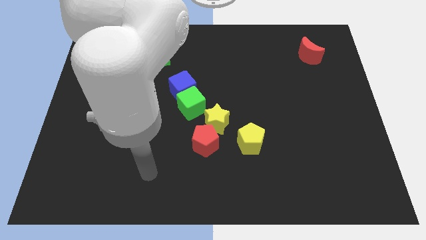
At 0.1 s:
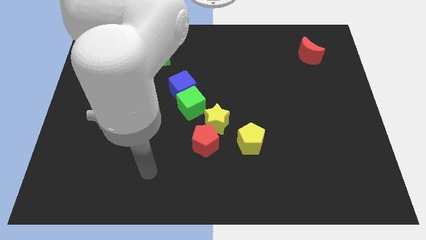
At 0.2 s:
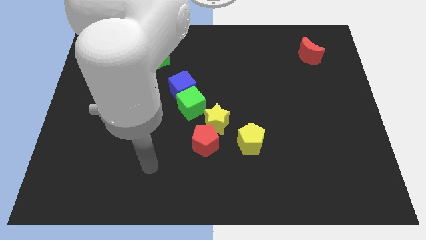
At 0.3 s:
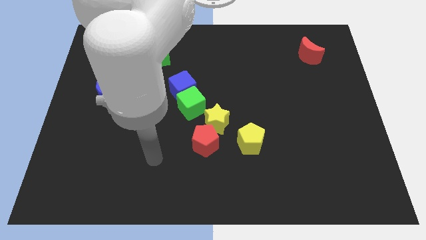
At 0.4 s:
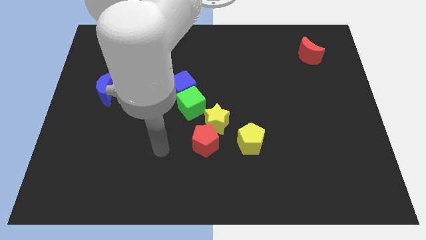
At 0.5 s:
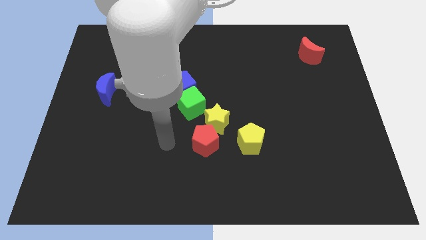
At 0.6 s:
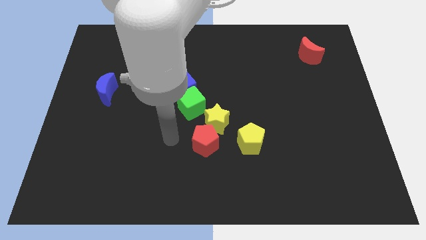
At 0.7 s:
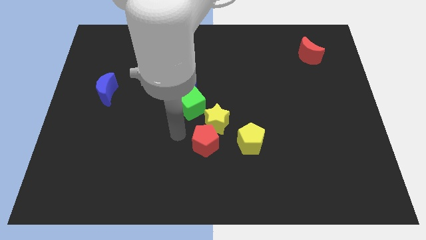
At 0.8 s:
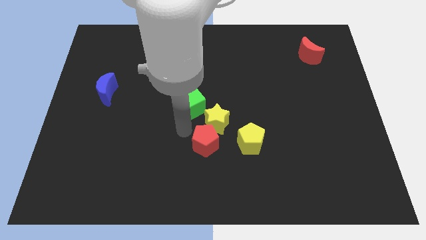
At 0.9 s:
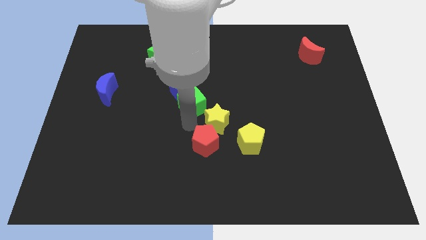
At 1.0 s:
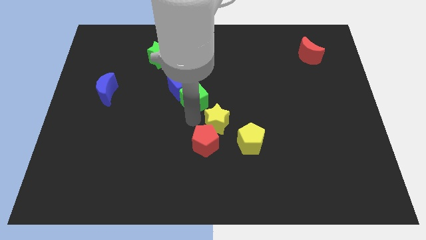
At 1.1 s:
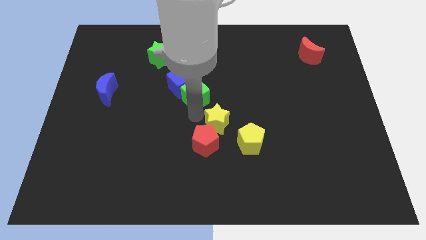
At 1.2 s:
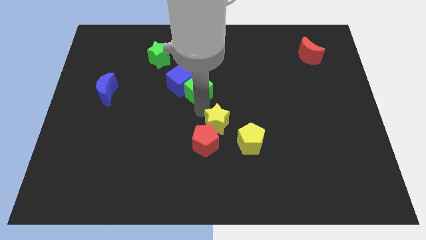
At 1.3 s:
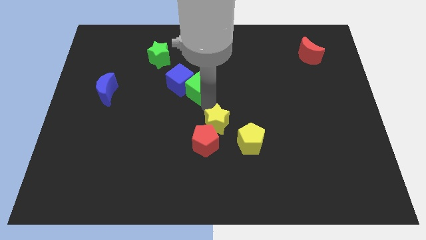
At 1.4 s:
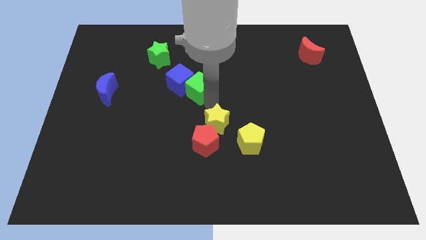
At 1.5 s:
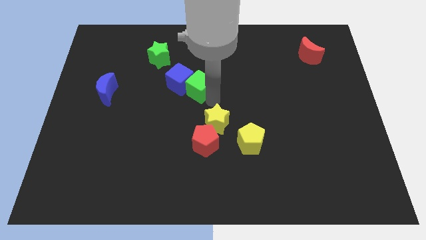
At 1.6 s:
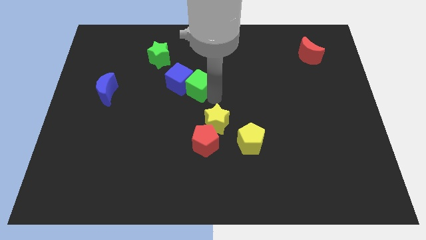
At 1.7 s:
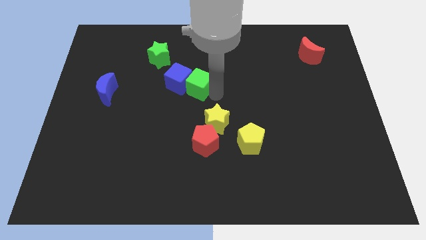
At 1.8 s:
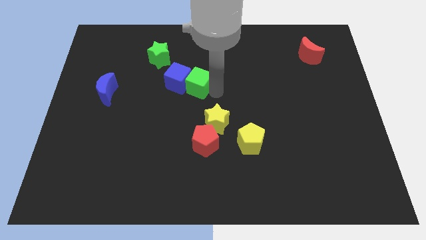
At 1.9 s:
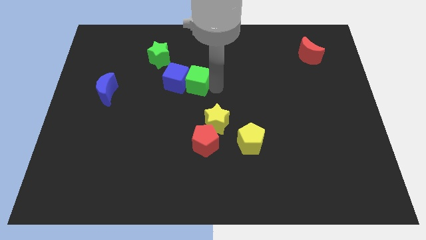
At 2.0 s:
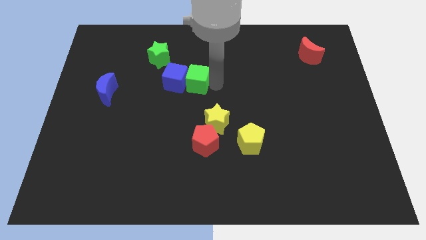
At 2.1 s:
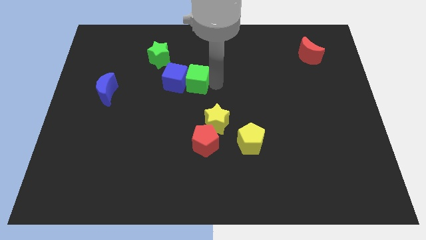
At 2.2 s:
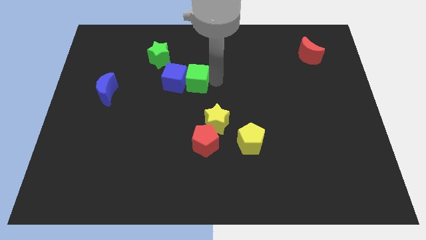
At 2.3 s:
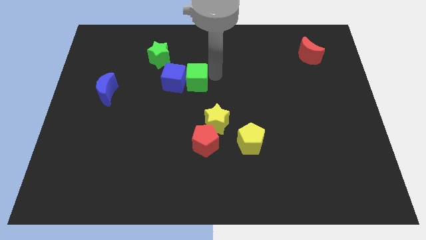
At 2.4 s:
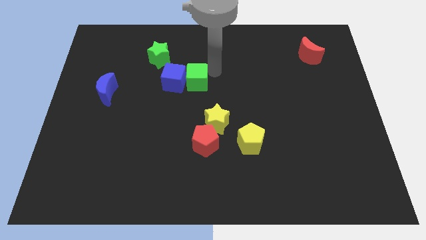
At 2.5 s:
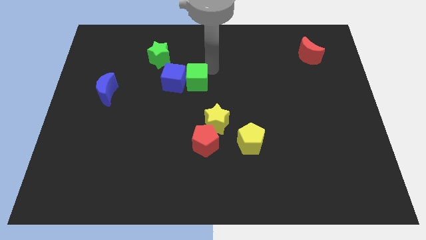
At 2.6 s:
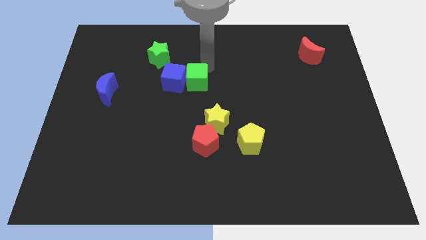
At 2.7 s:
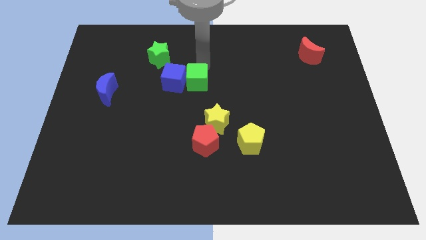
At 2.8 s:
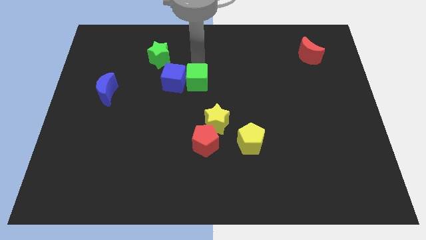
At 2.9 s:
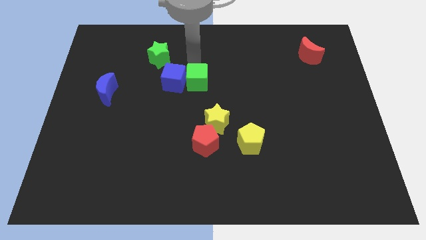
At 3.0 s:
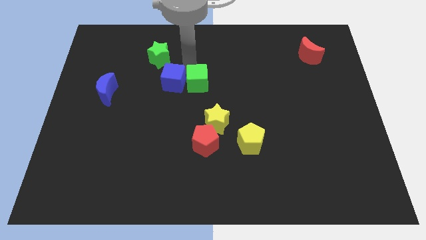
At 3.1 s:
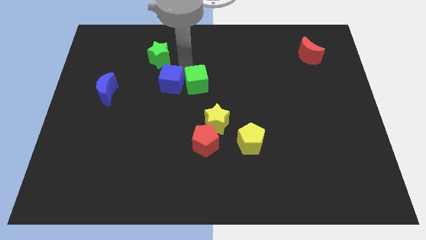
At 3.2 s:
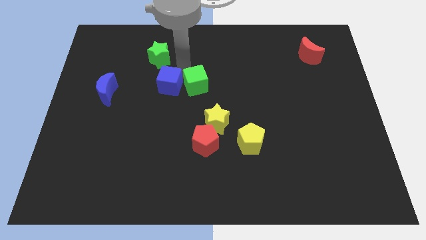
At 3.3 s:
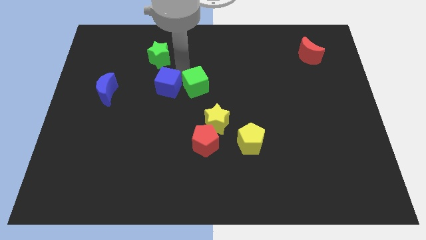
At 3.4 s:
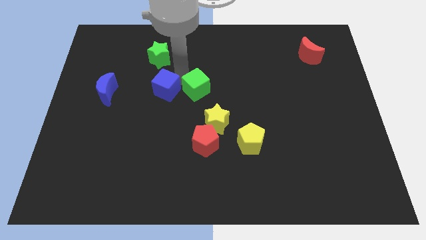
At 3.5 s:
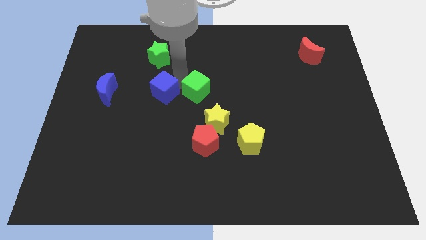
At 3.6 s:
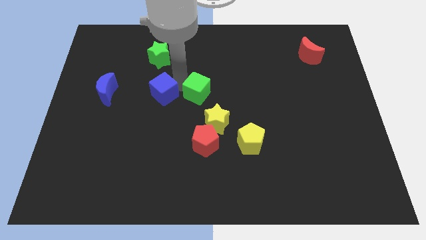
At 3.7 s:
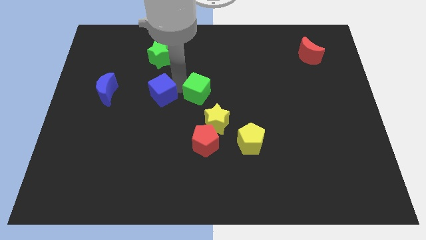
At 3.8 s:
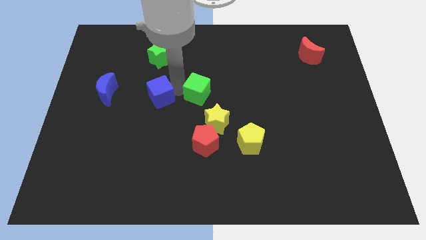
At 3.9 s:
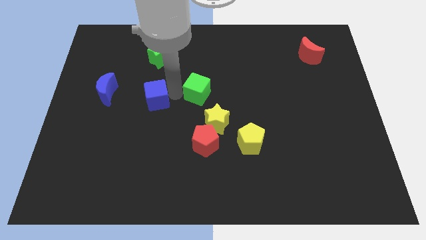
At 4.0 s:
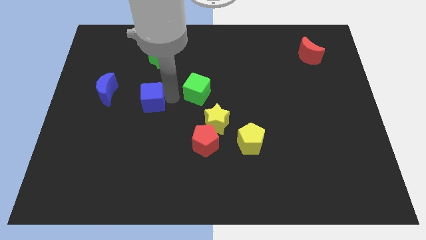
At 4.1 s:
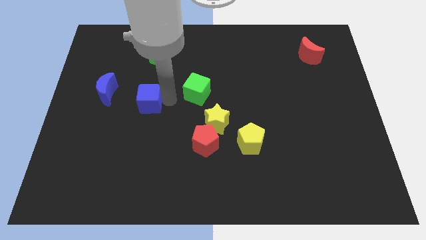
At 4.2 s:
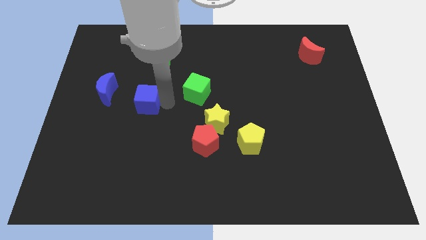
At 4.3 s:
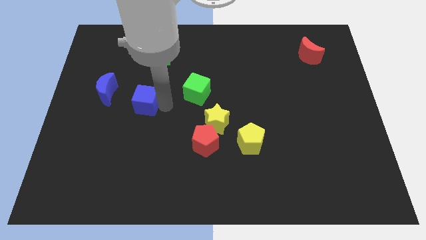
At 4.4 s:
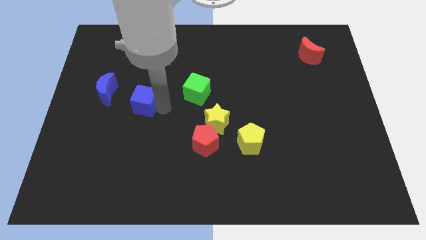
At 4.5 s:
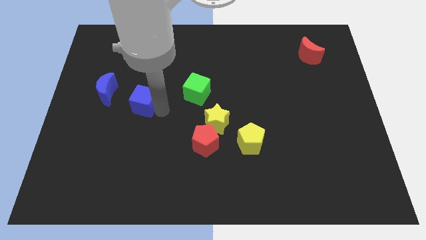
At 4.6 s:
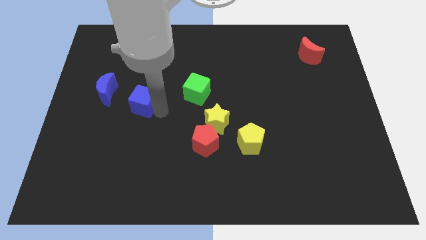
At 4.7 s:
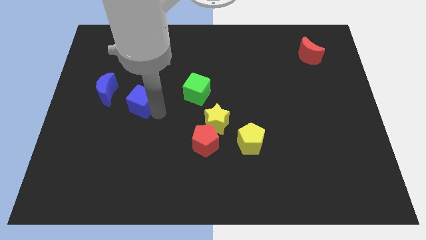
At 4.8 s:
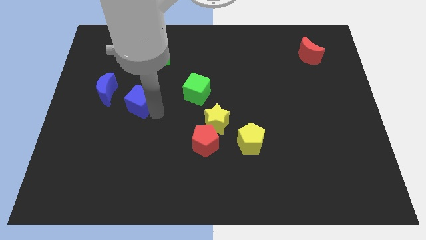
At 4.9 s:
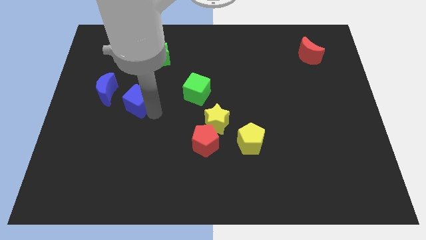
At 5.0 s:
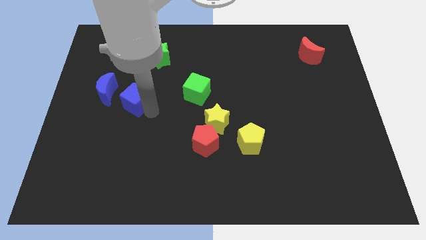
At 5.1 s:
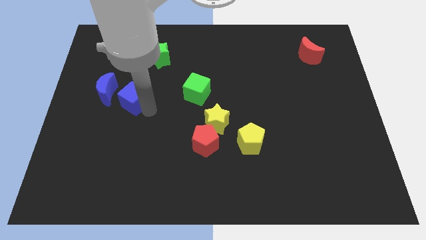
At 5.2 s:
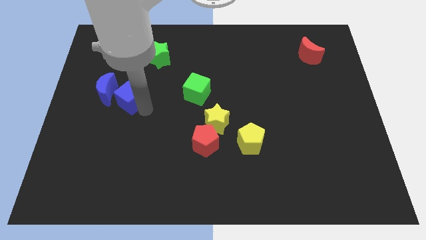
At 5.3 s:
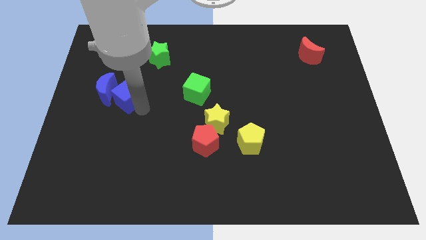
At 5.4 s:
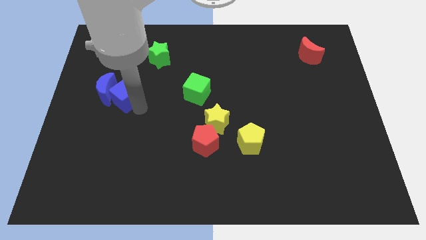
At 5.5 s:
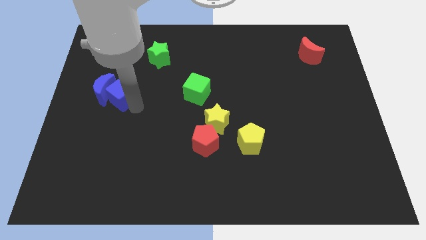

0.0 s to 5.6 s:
put the blue cube towards the blue moon

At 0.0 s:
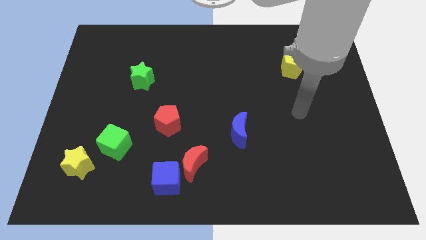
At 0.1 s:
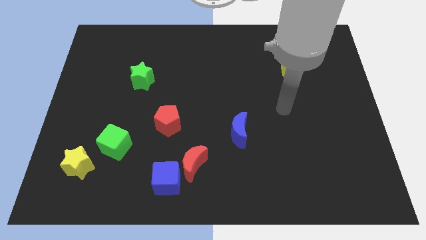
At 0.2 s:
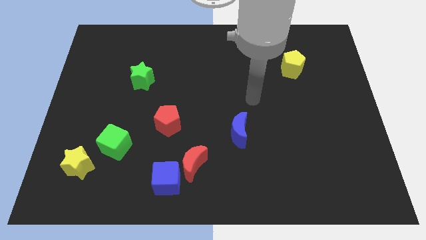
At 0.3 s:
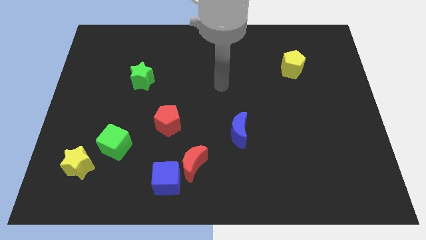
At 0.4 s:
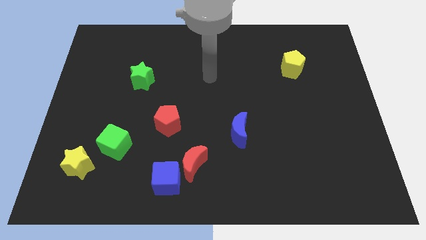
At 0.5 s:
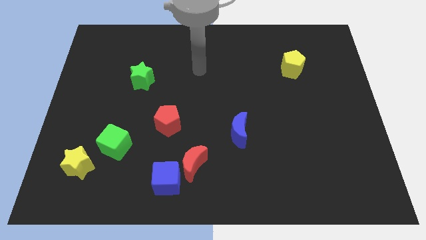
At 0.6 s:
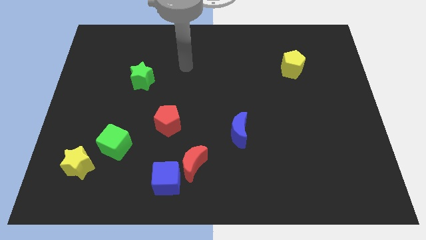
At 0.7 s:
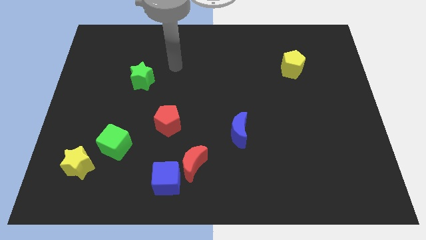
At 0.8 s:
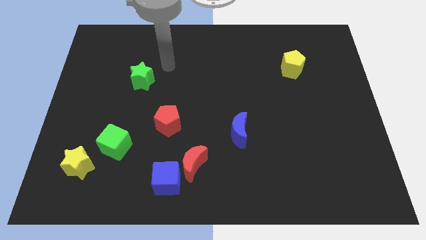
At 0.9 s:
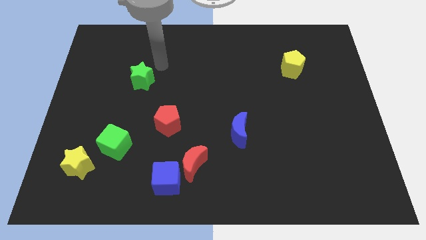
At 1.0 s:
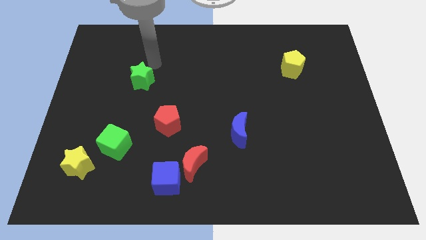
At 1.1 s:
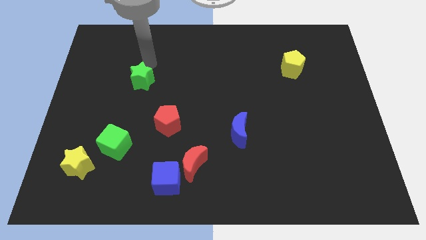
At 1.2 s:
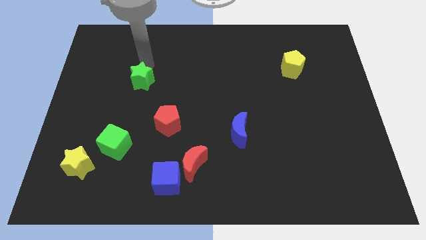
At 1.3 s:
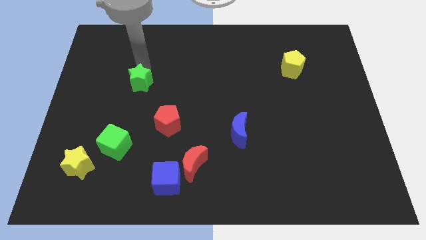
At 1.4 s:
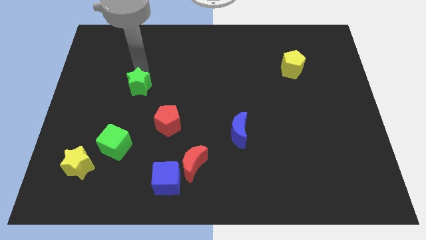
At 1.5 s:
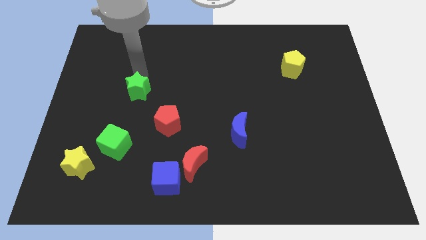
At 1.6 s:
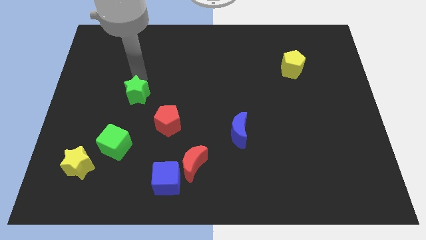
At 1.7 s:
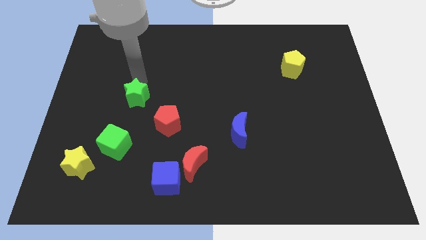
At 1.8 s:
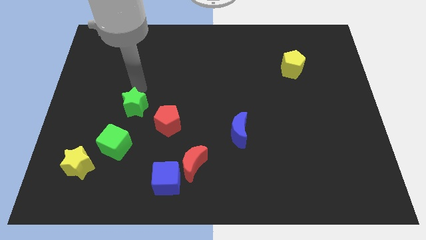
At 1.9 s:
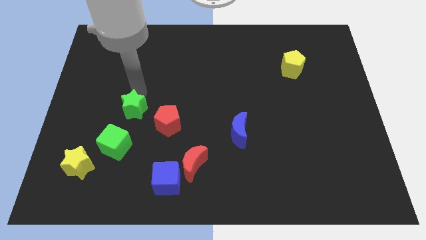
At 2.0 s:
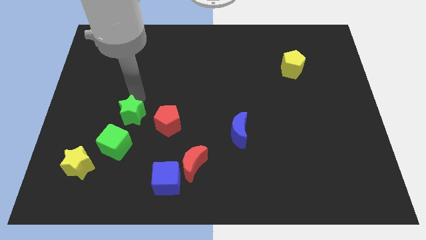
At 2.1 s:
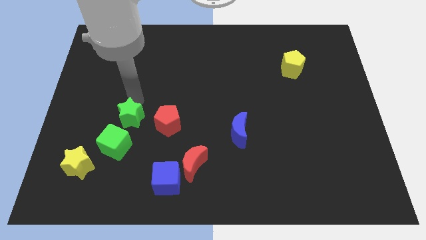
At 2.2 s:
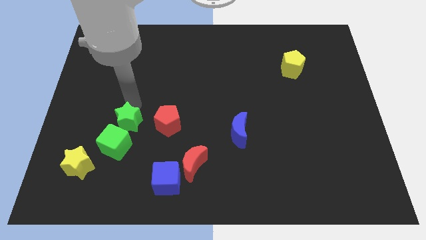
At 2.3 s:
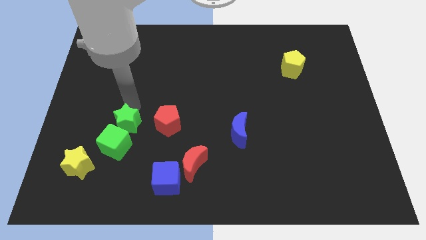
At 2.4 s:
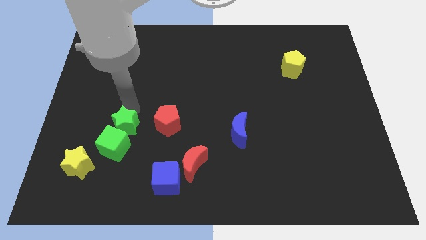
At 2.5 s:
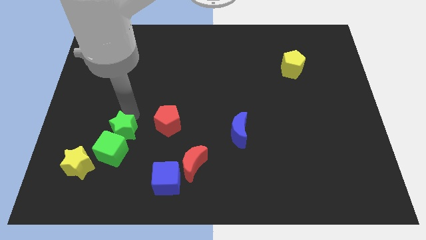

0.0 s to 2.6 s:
slide the green star towards the green cube

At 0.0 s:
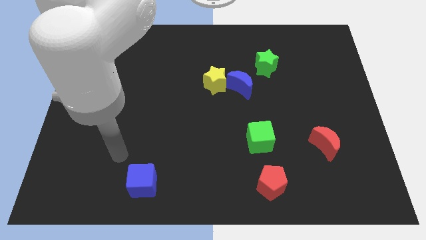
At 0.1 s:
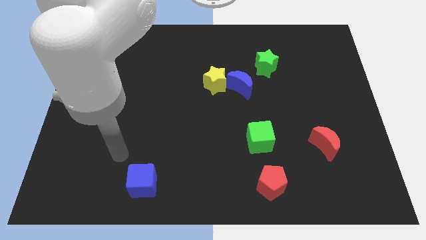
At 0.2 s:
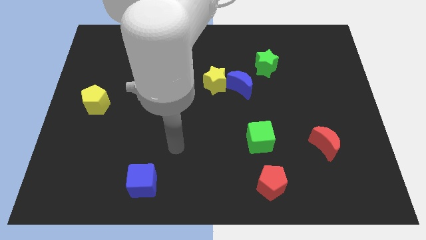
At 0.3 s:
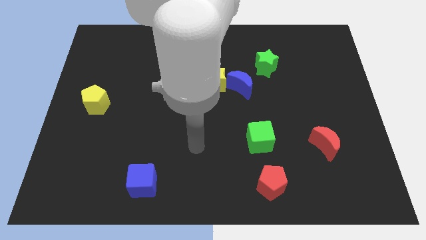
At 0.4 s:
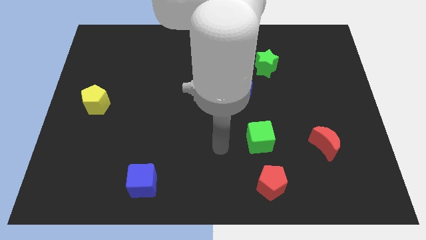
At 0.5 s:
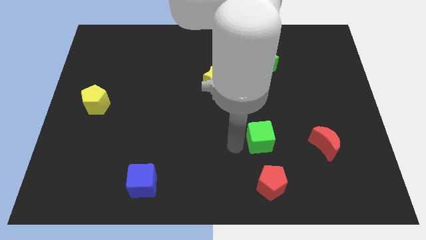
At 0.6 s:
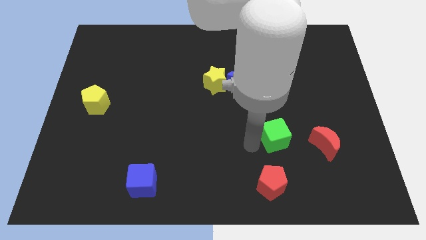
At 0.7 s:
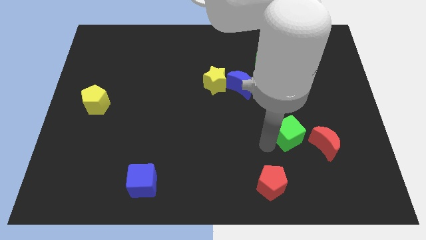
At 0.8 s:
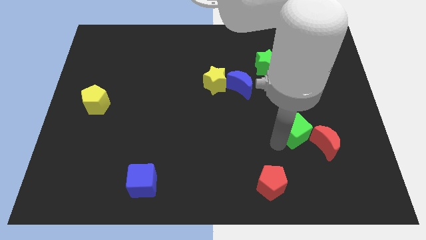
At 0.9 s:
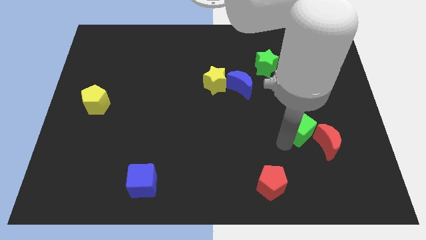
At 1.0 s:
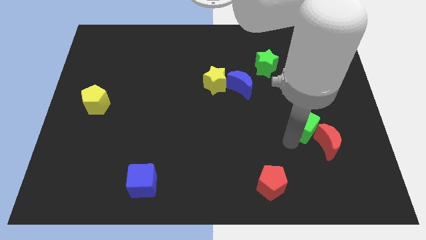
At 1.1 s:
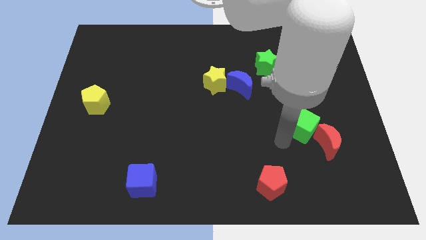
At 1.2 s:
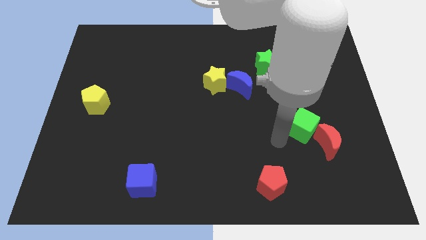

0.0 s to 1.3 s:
put the green cube to the red moon
